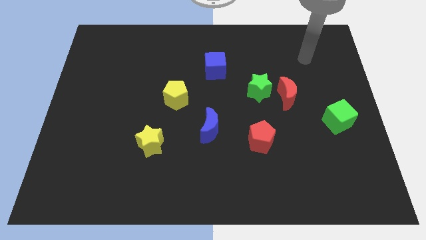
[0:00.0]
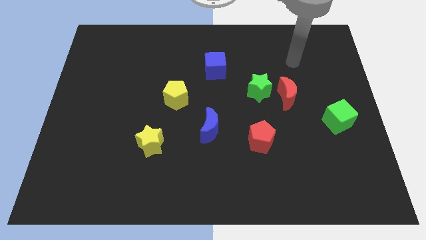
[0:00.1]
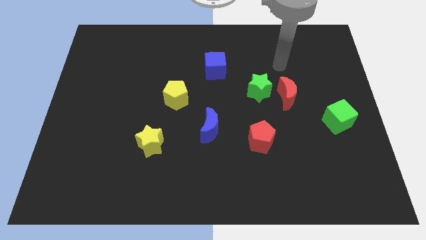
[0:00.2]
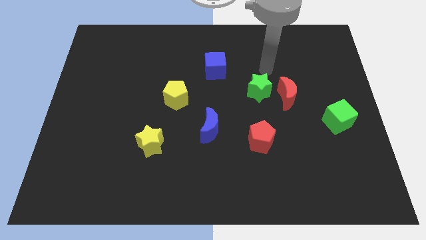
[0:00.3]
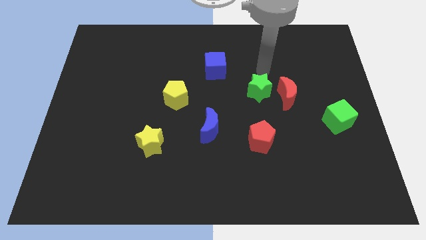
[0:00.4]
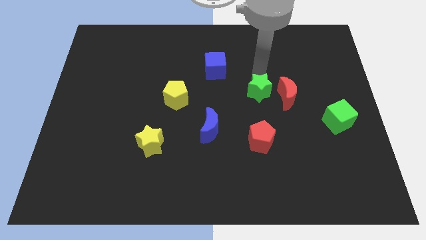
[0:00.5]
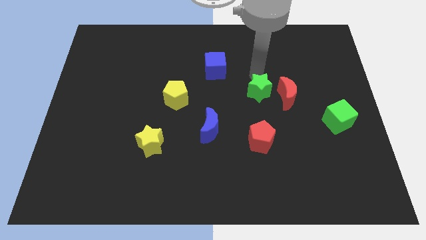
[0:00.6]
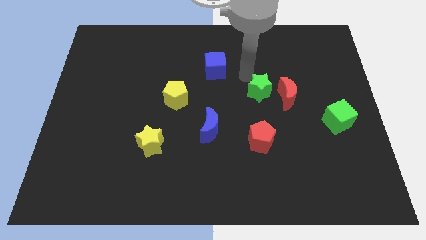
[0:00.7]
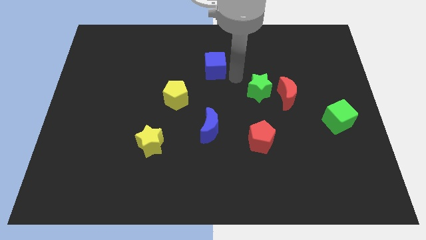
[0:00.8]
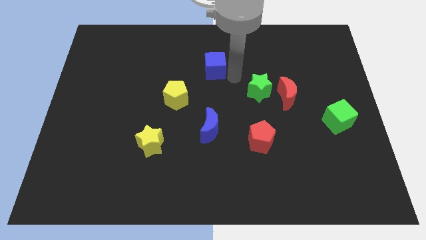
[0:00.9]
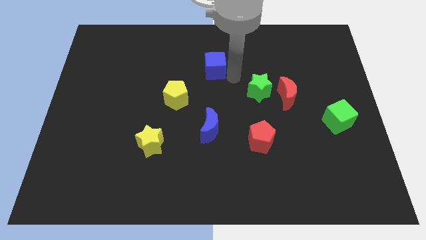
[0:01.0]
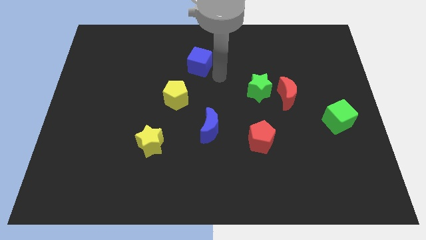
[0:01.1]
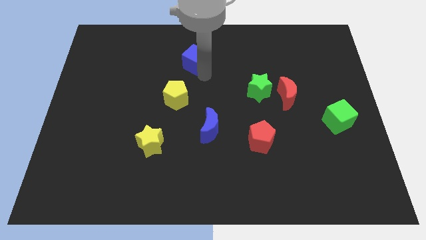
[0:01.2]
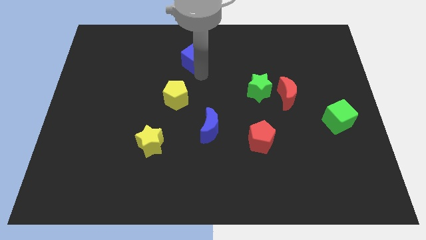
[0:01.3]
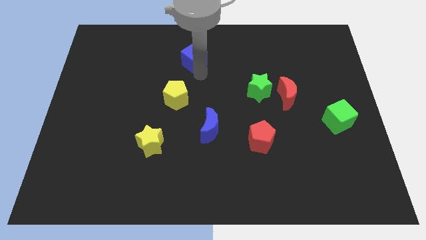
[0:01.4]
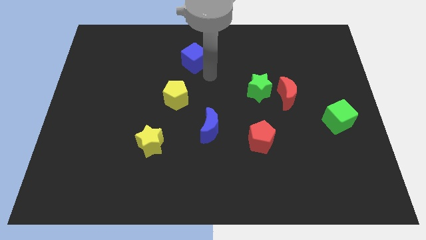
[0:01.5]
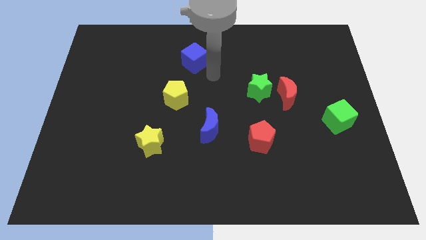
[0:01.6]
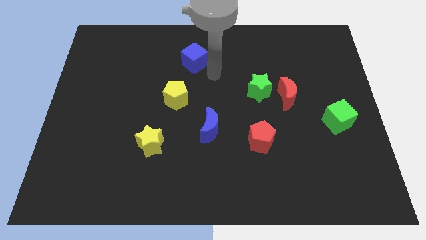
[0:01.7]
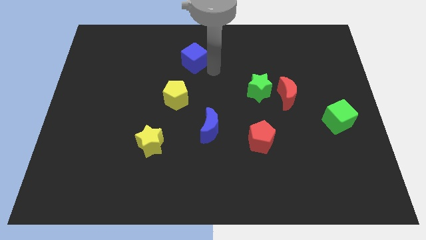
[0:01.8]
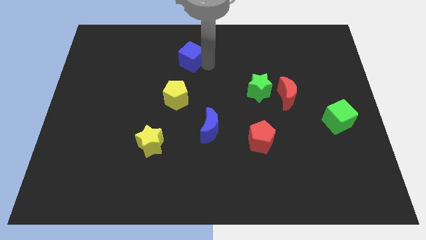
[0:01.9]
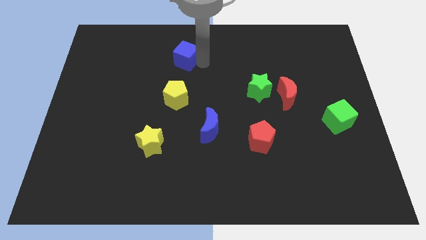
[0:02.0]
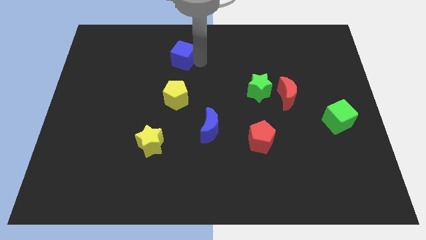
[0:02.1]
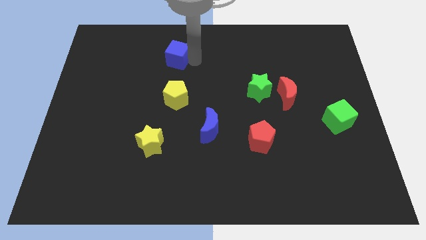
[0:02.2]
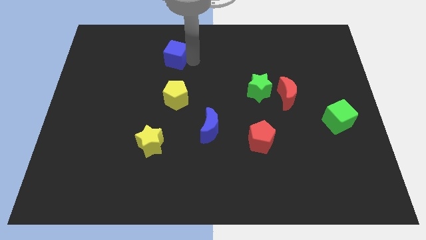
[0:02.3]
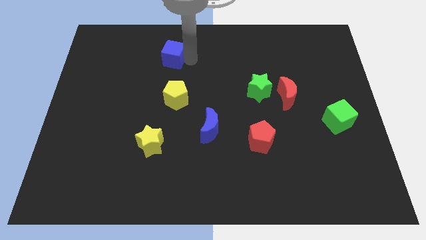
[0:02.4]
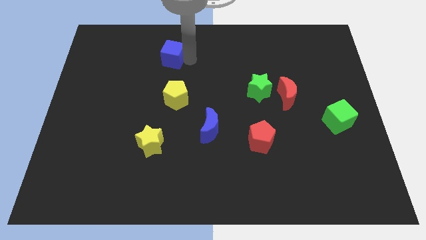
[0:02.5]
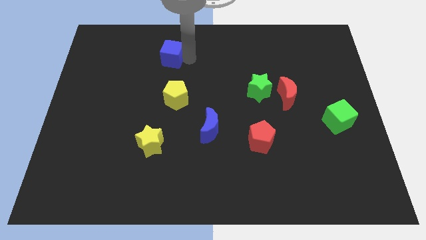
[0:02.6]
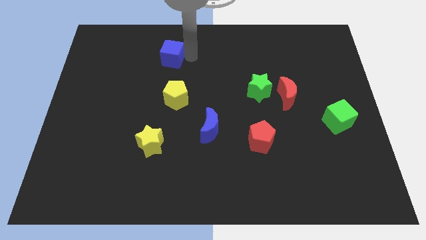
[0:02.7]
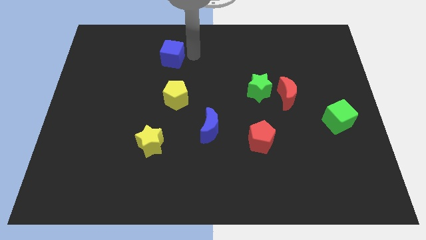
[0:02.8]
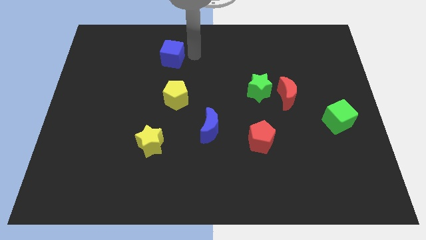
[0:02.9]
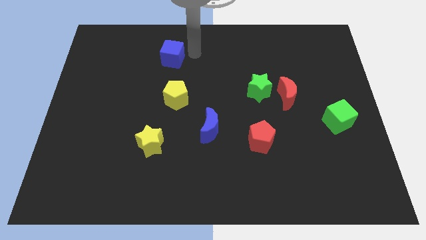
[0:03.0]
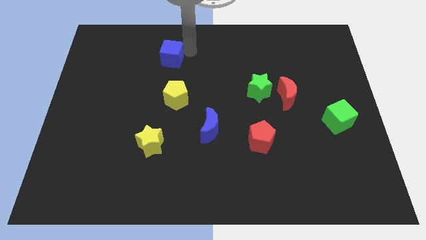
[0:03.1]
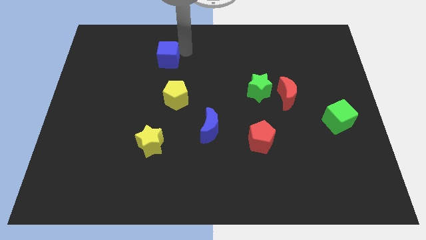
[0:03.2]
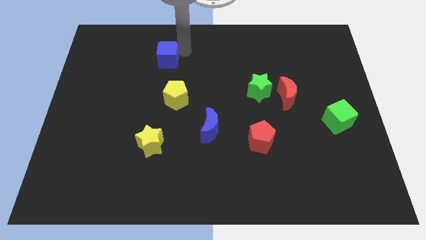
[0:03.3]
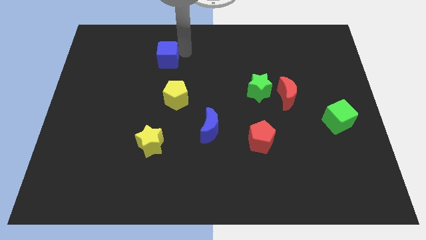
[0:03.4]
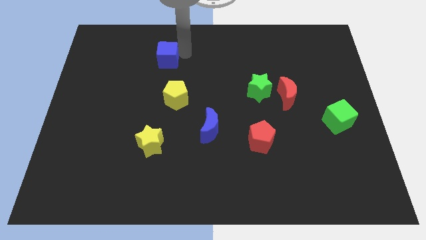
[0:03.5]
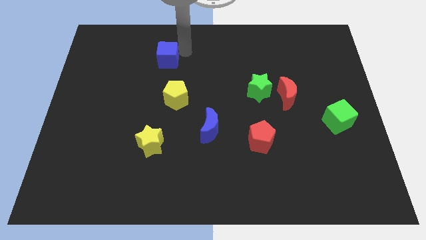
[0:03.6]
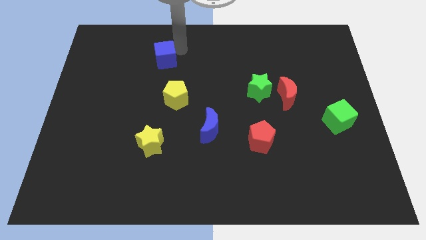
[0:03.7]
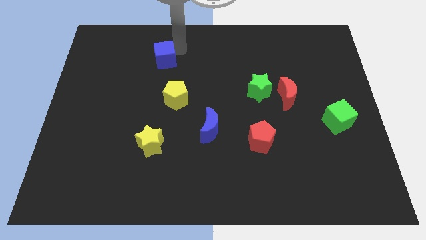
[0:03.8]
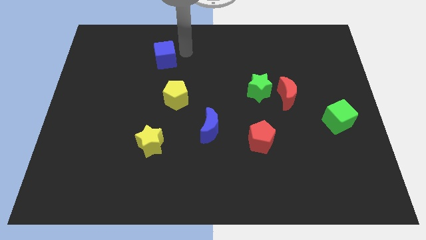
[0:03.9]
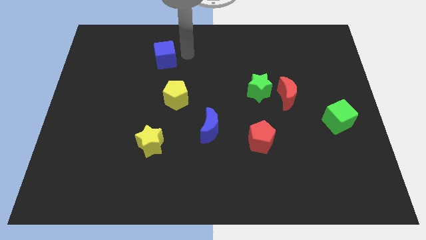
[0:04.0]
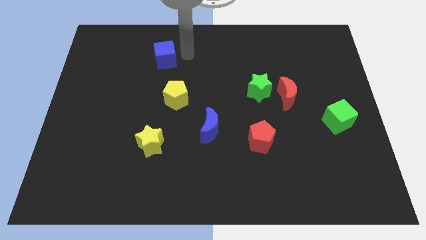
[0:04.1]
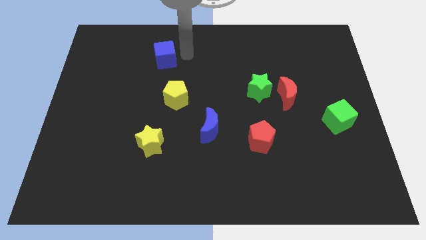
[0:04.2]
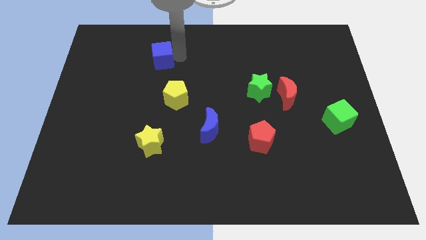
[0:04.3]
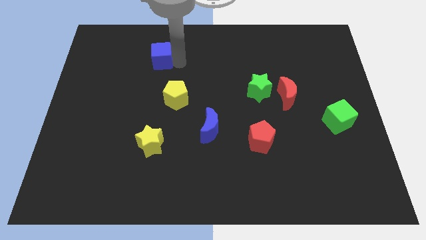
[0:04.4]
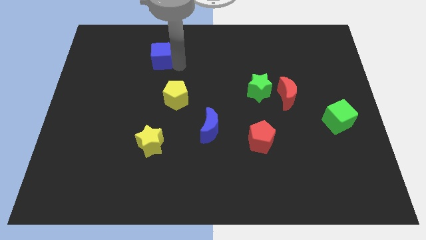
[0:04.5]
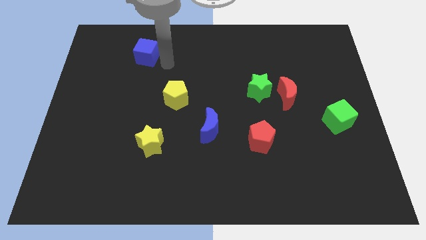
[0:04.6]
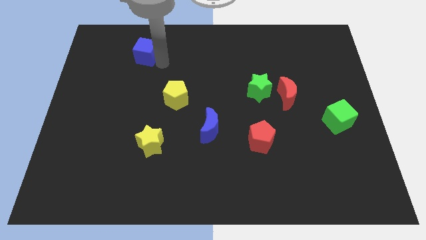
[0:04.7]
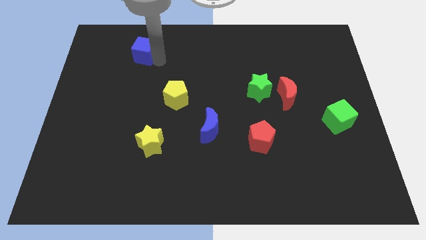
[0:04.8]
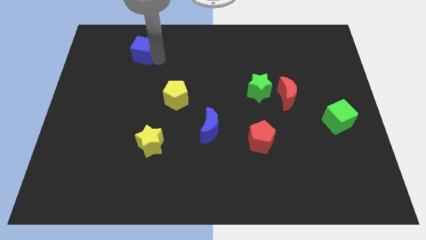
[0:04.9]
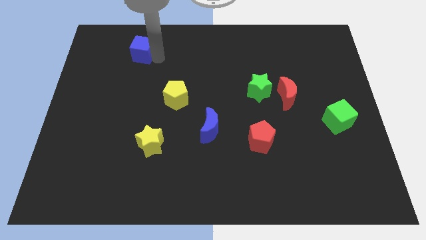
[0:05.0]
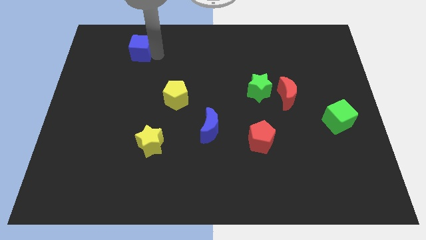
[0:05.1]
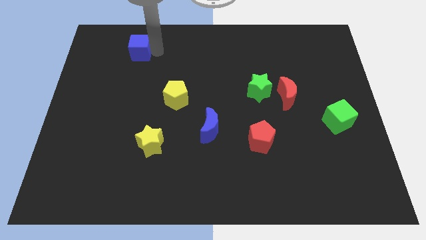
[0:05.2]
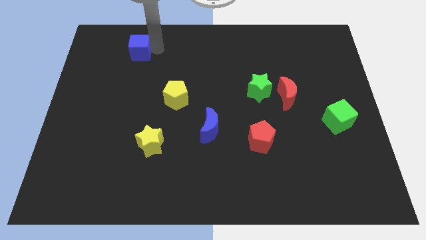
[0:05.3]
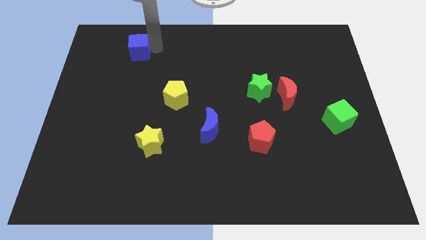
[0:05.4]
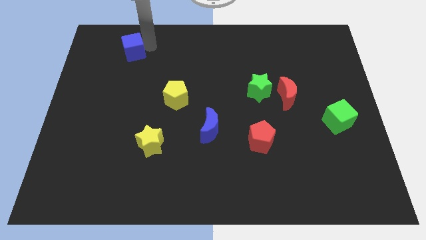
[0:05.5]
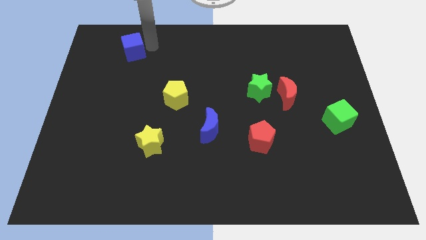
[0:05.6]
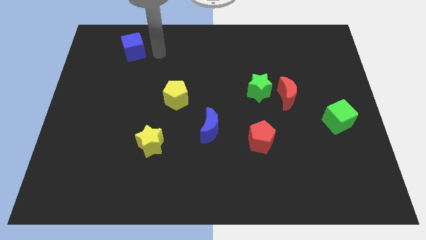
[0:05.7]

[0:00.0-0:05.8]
move the blue cube towards the top left

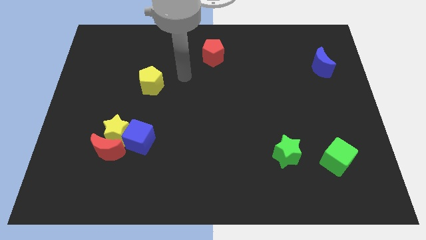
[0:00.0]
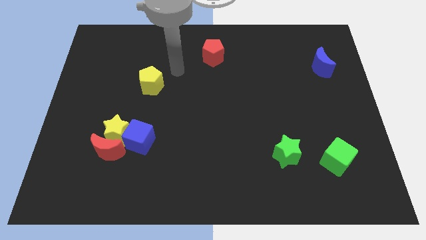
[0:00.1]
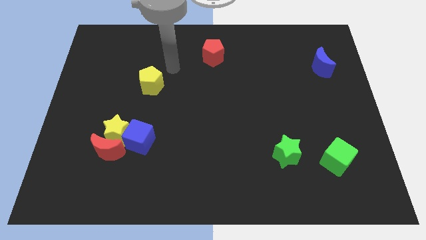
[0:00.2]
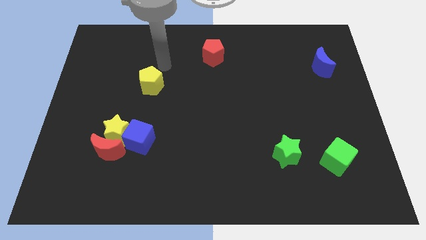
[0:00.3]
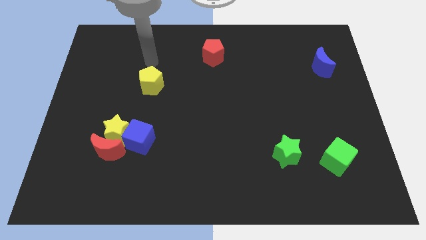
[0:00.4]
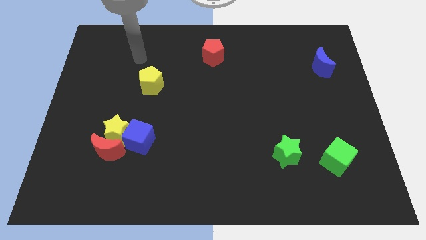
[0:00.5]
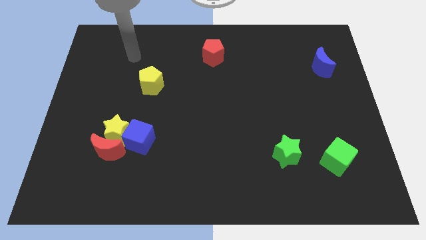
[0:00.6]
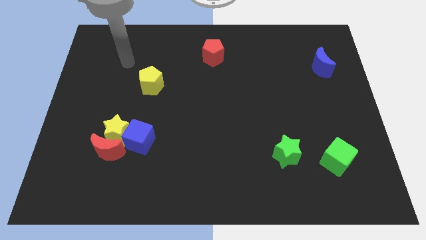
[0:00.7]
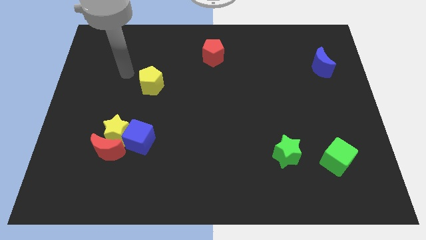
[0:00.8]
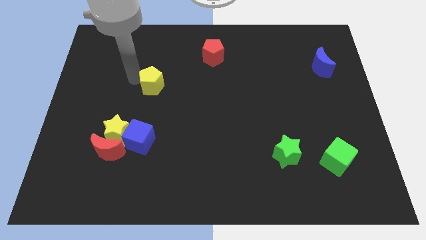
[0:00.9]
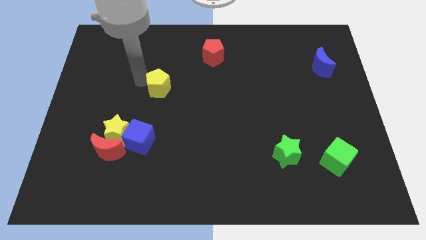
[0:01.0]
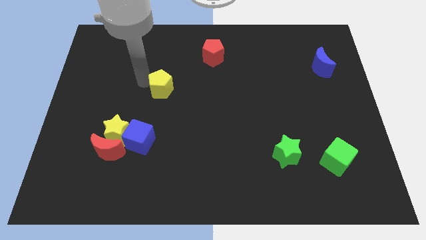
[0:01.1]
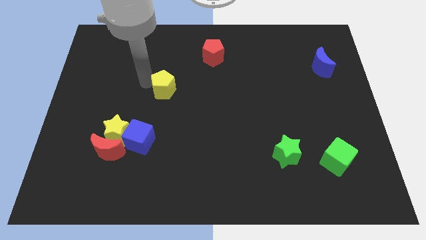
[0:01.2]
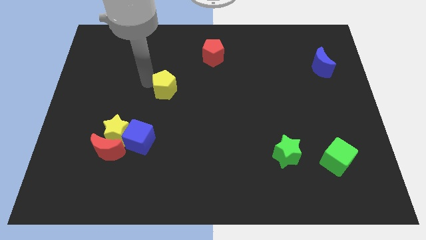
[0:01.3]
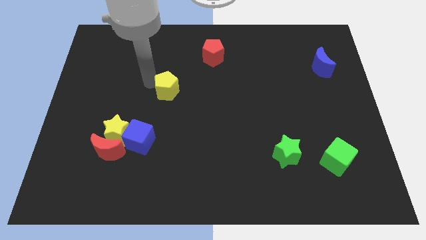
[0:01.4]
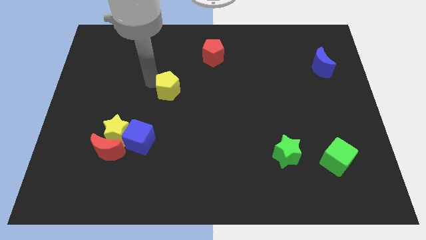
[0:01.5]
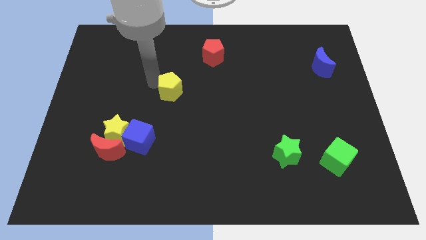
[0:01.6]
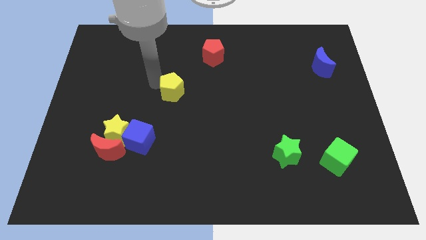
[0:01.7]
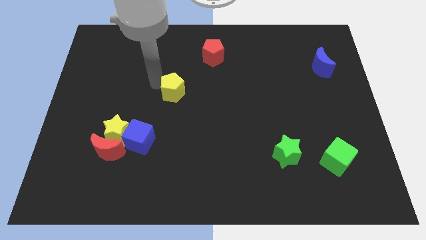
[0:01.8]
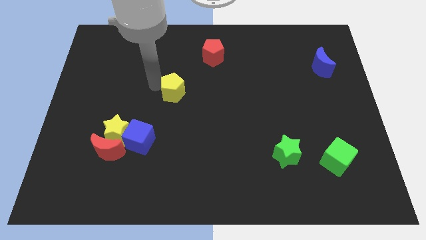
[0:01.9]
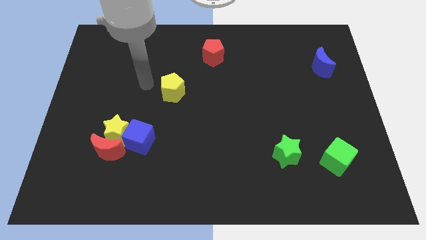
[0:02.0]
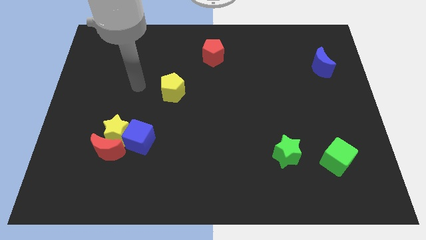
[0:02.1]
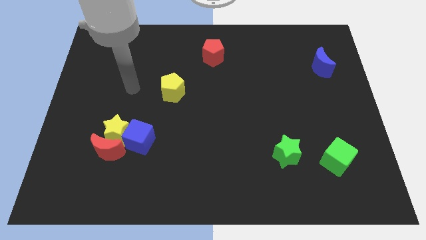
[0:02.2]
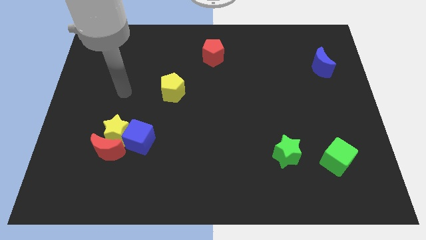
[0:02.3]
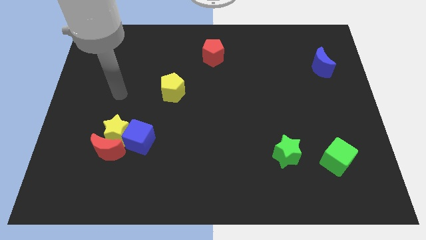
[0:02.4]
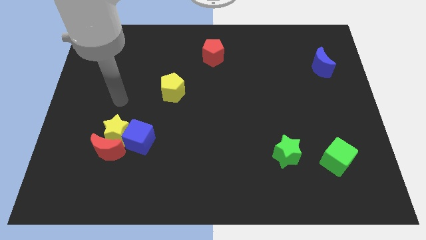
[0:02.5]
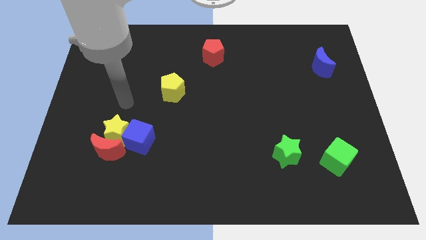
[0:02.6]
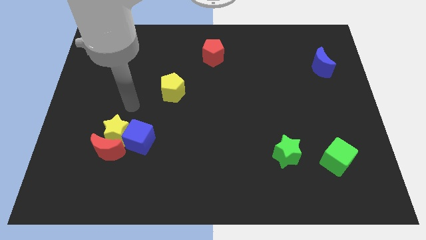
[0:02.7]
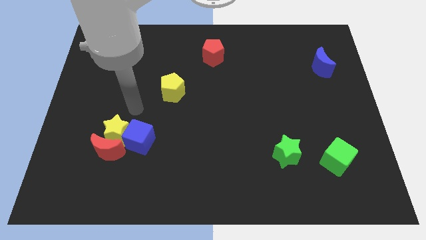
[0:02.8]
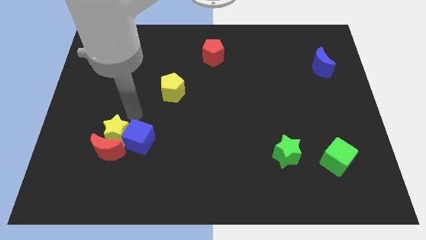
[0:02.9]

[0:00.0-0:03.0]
place the yellow pentagon diagonally in between the red pentagon and the blue cube

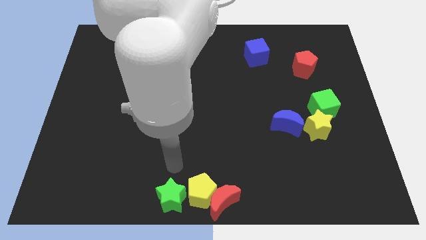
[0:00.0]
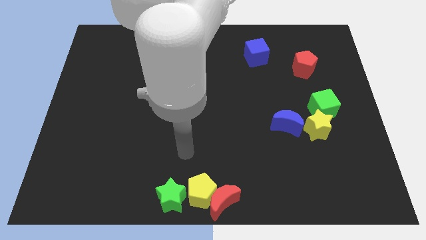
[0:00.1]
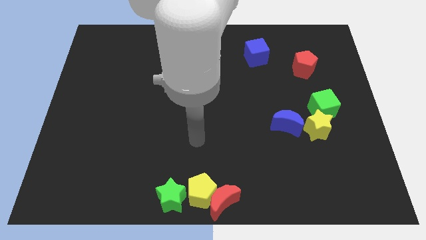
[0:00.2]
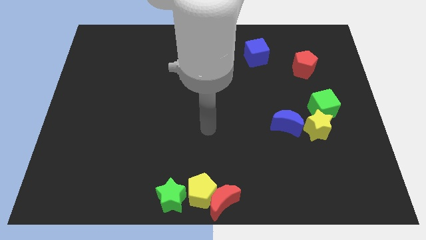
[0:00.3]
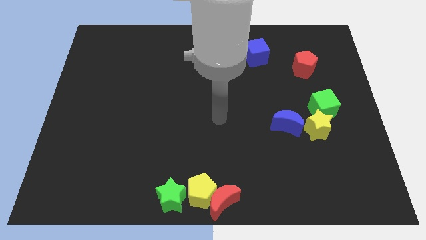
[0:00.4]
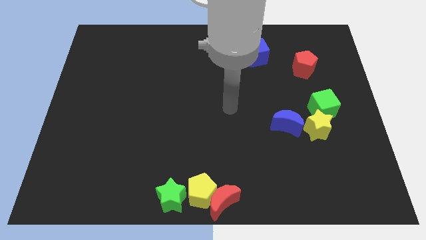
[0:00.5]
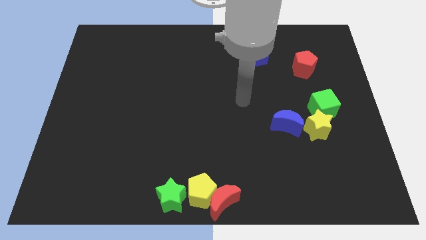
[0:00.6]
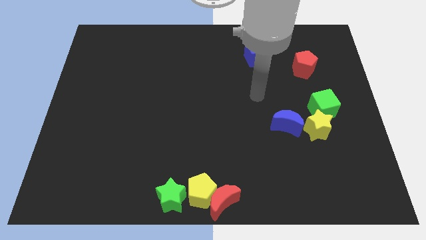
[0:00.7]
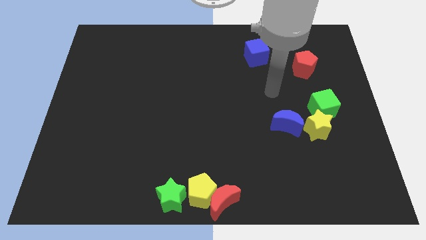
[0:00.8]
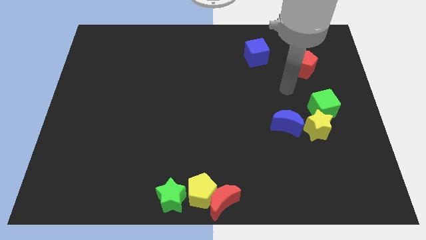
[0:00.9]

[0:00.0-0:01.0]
move the arm away from the green star
